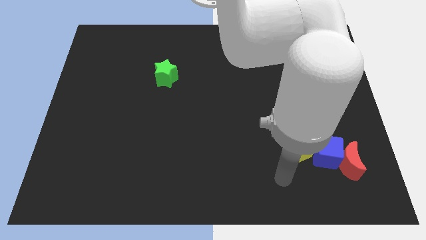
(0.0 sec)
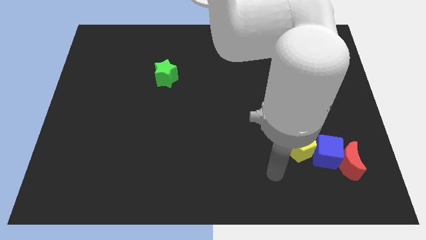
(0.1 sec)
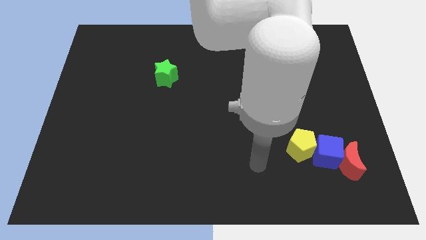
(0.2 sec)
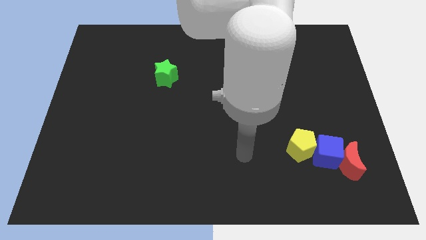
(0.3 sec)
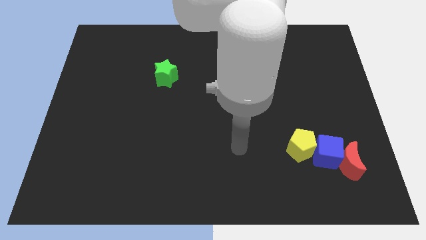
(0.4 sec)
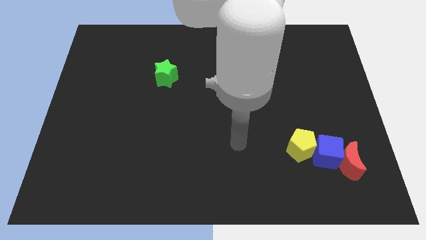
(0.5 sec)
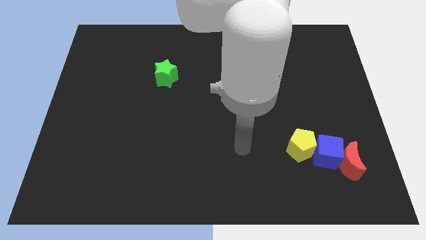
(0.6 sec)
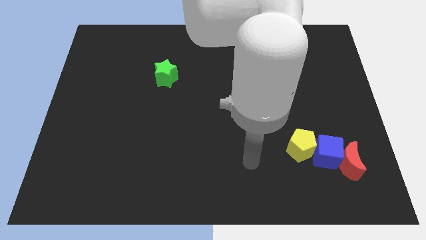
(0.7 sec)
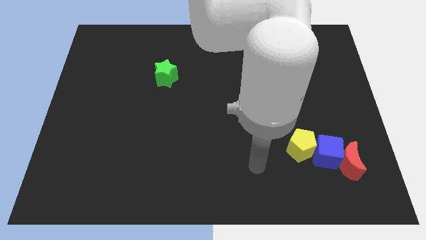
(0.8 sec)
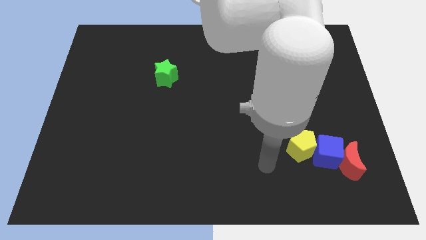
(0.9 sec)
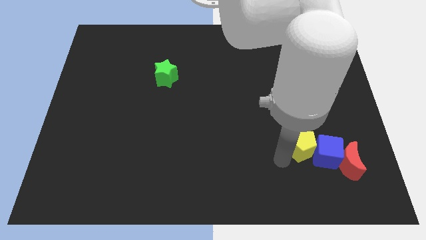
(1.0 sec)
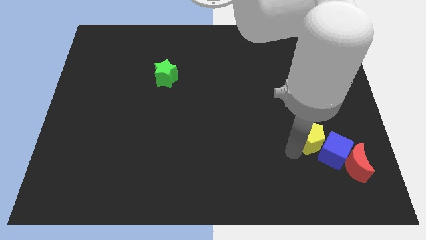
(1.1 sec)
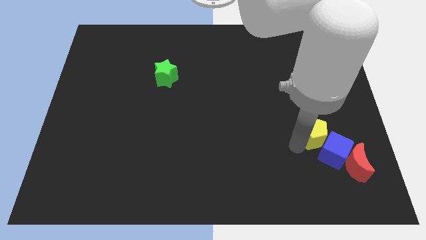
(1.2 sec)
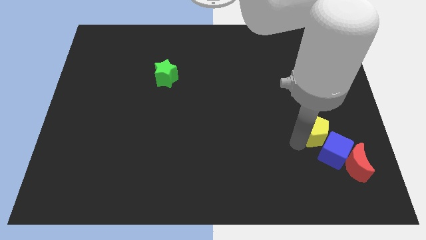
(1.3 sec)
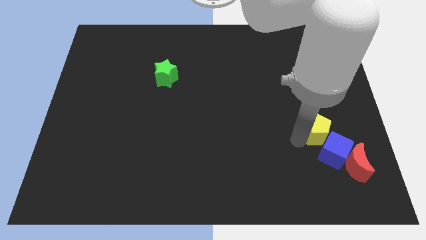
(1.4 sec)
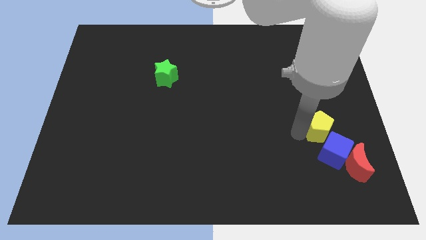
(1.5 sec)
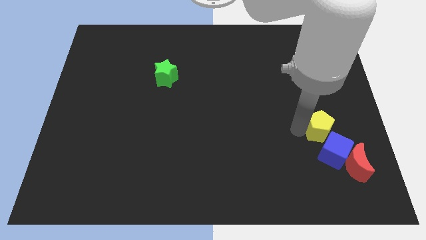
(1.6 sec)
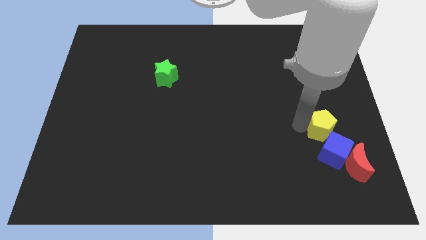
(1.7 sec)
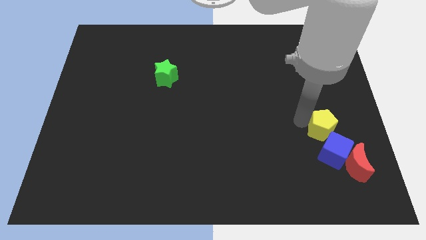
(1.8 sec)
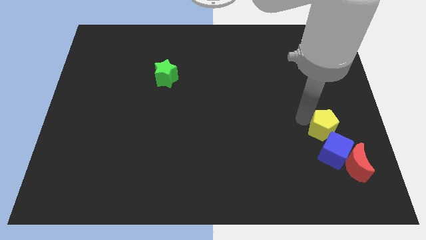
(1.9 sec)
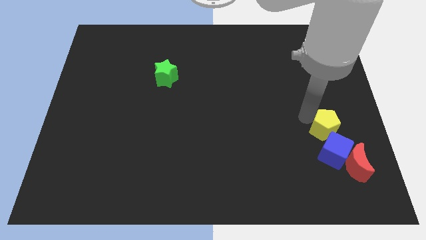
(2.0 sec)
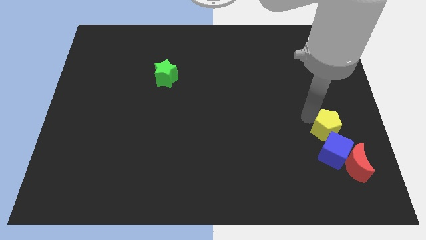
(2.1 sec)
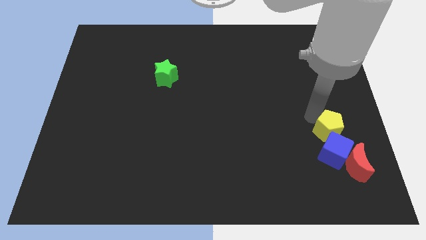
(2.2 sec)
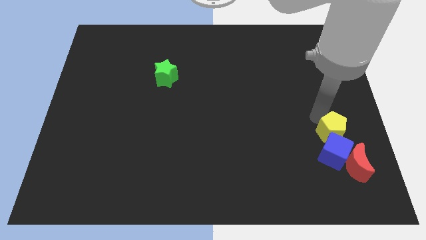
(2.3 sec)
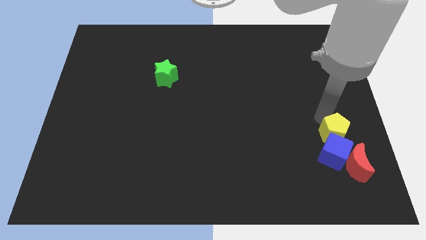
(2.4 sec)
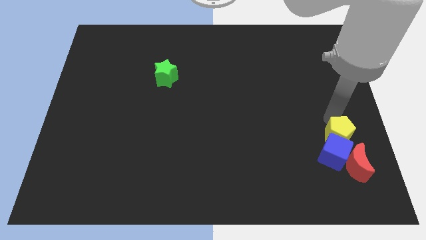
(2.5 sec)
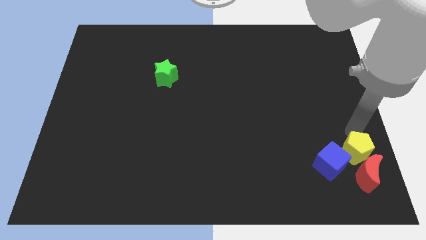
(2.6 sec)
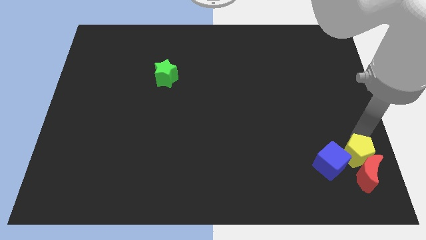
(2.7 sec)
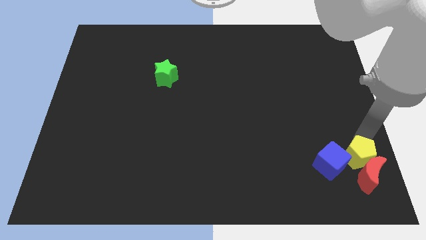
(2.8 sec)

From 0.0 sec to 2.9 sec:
push the yellow pentagon to the red moon

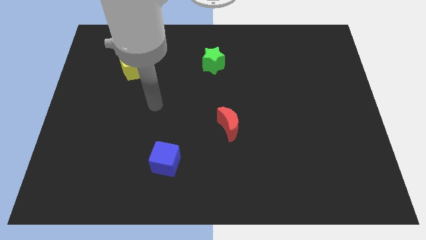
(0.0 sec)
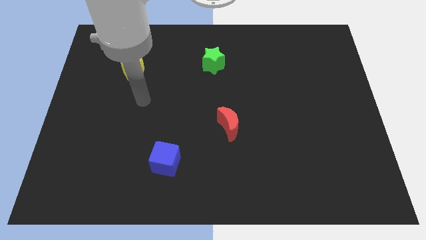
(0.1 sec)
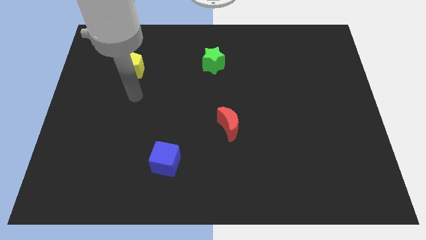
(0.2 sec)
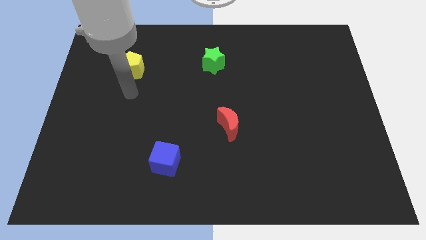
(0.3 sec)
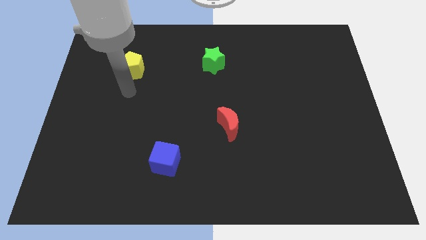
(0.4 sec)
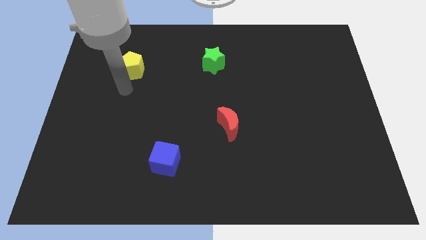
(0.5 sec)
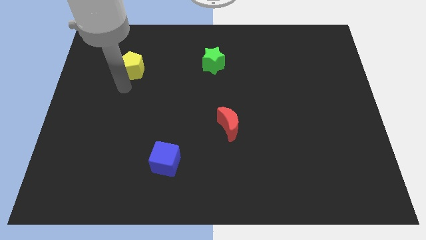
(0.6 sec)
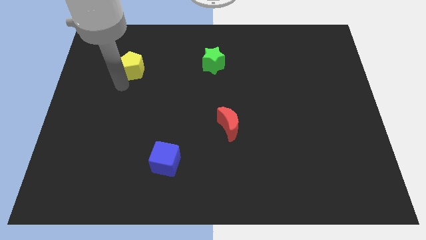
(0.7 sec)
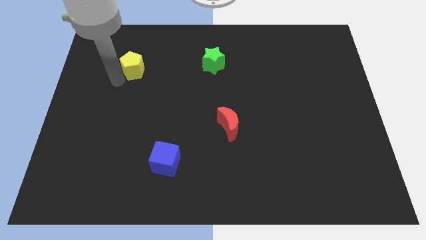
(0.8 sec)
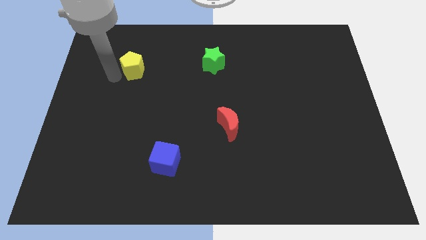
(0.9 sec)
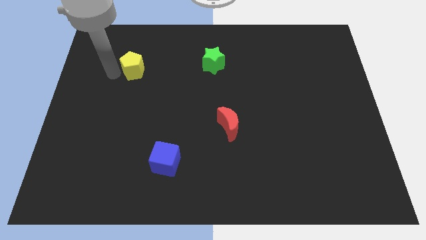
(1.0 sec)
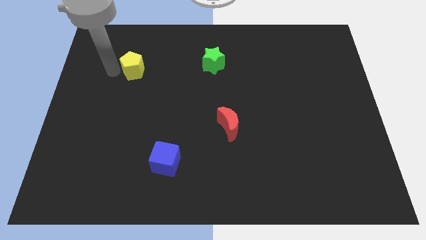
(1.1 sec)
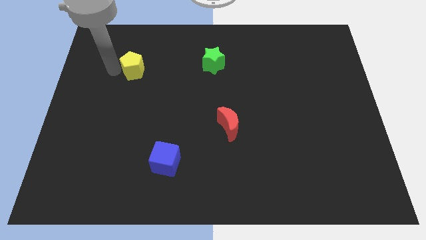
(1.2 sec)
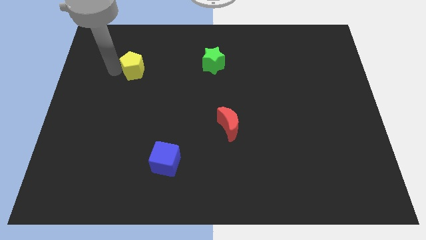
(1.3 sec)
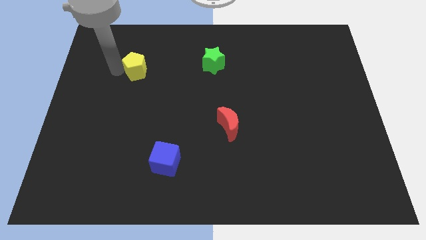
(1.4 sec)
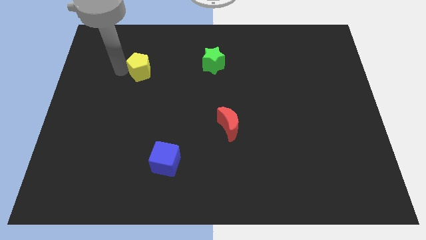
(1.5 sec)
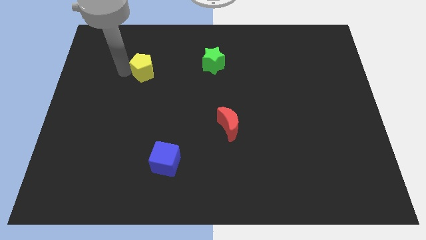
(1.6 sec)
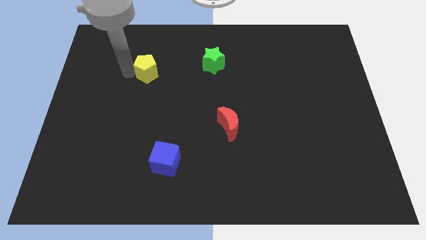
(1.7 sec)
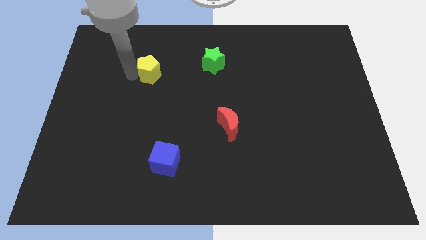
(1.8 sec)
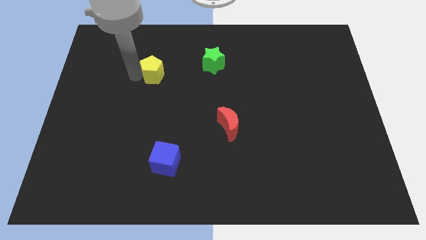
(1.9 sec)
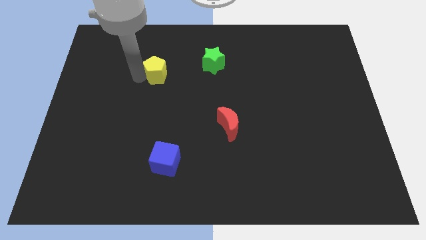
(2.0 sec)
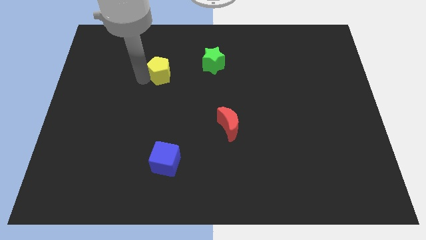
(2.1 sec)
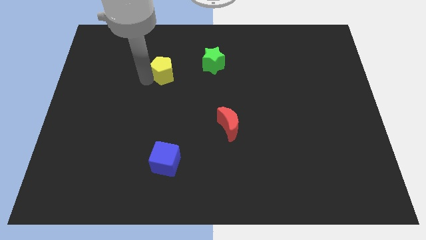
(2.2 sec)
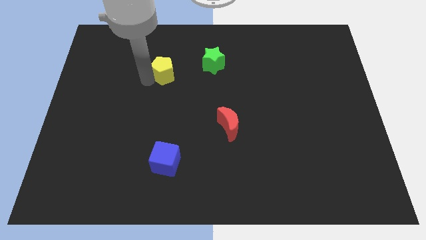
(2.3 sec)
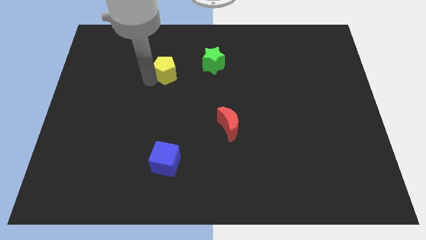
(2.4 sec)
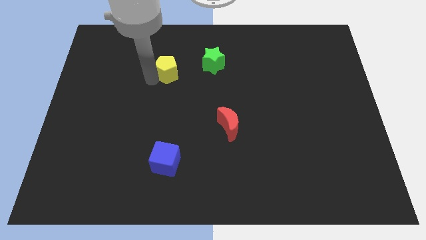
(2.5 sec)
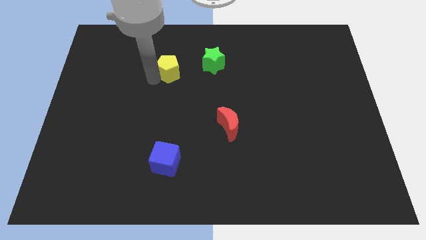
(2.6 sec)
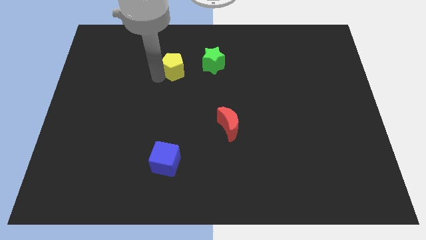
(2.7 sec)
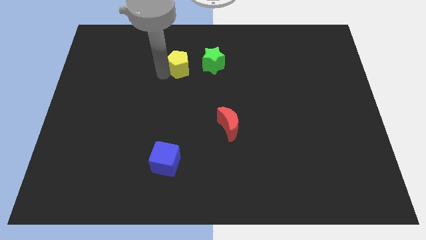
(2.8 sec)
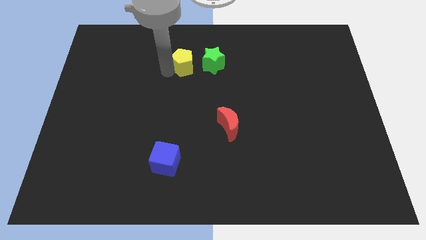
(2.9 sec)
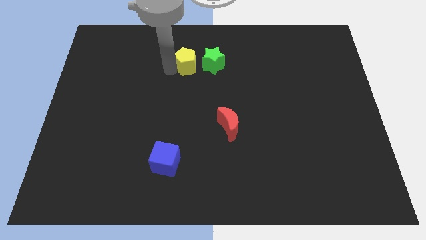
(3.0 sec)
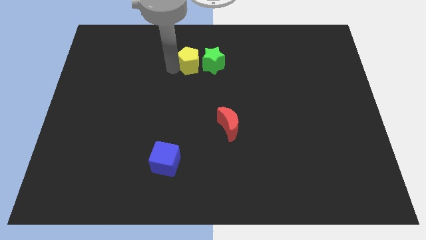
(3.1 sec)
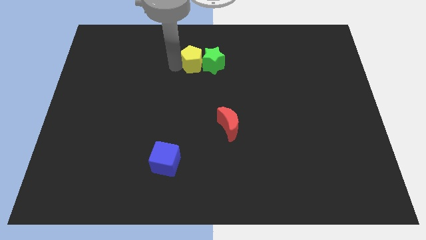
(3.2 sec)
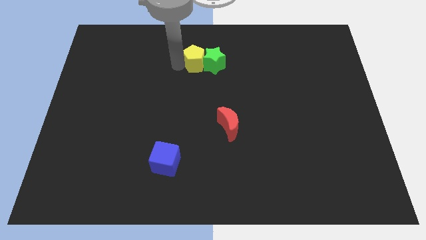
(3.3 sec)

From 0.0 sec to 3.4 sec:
move the pentagon close to the star

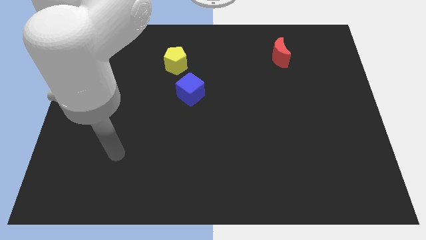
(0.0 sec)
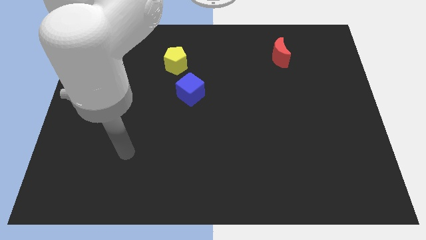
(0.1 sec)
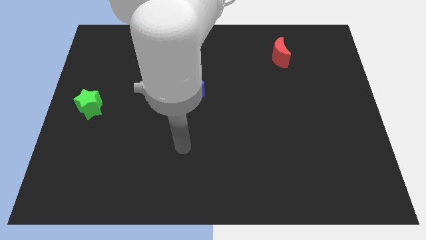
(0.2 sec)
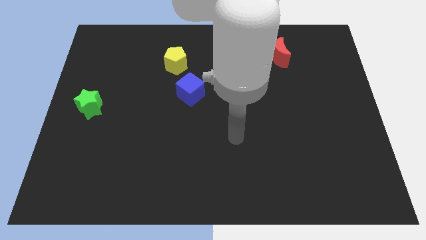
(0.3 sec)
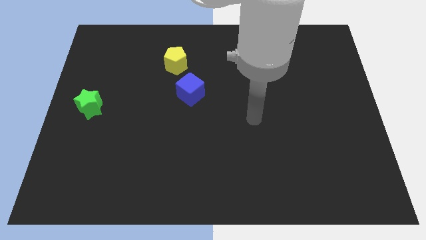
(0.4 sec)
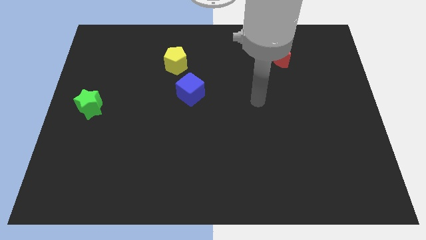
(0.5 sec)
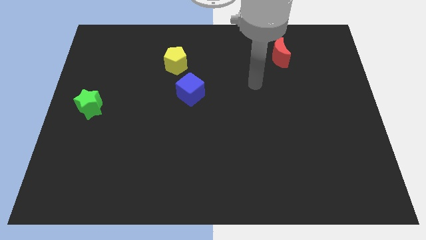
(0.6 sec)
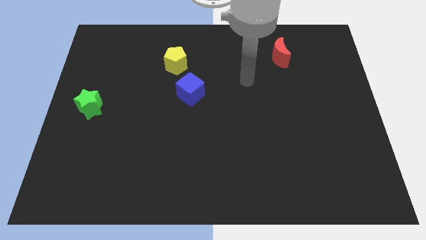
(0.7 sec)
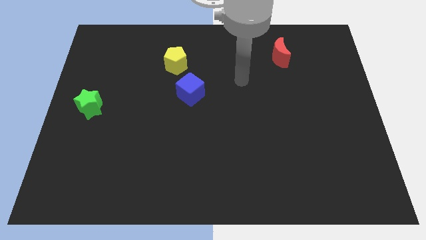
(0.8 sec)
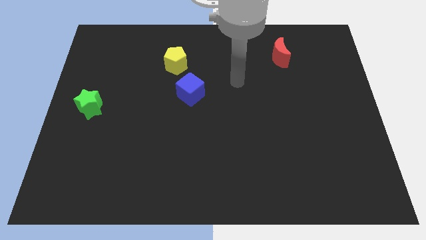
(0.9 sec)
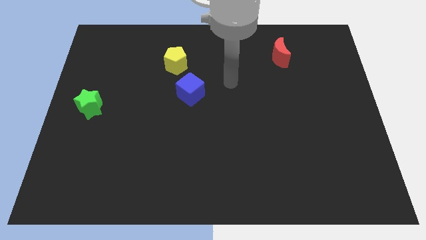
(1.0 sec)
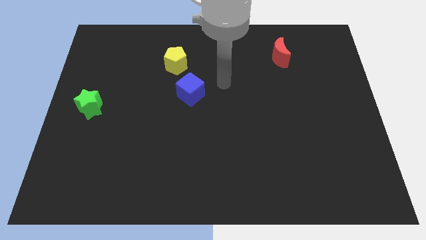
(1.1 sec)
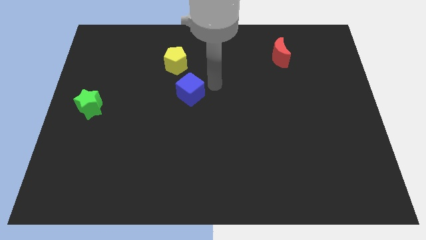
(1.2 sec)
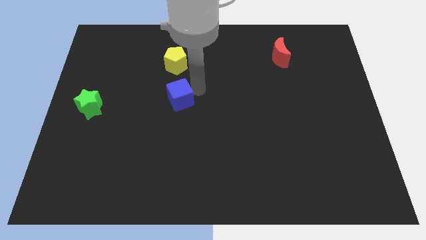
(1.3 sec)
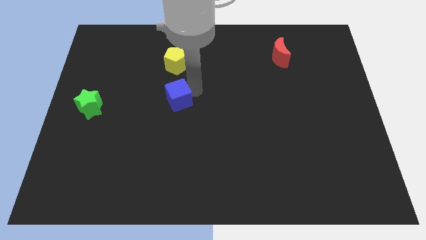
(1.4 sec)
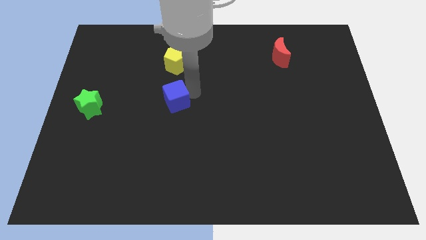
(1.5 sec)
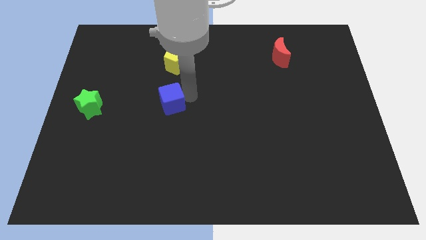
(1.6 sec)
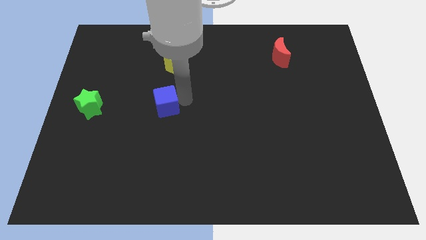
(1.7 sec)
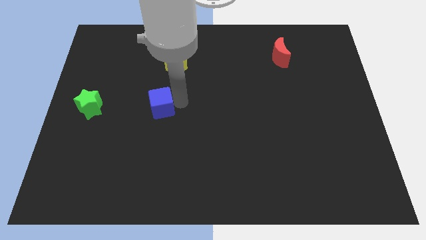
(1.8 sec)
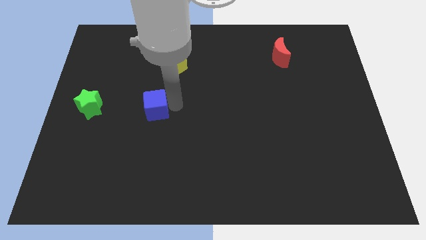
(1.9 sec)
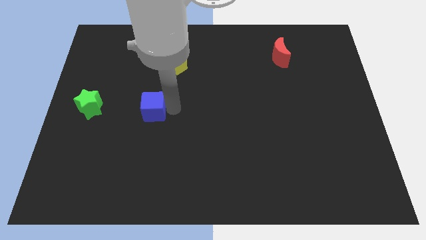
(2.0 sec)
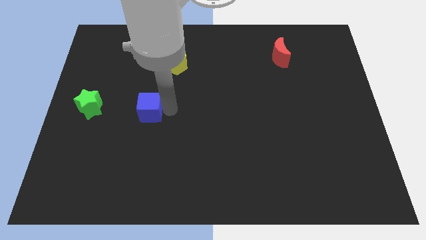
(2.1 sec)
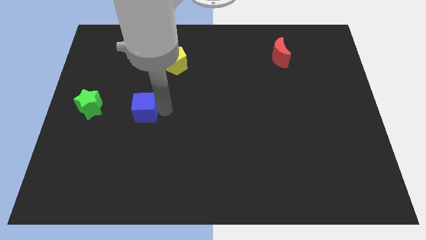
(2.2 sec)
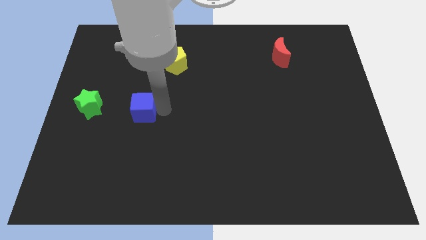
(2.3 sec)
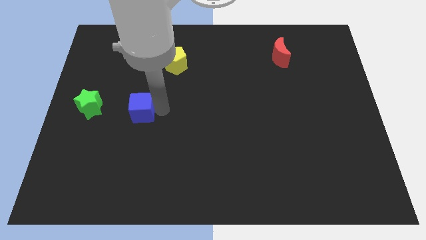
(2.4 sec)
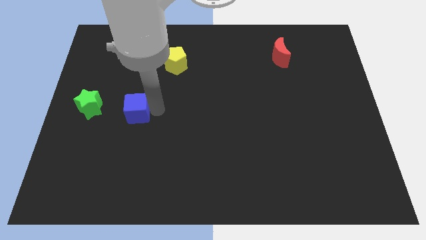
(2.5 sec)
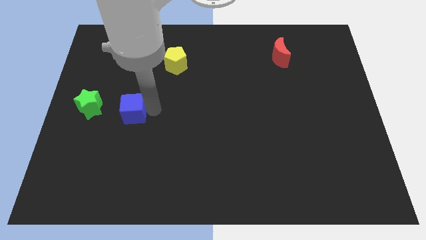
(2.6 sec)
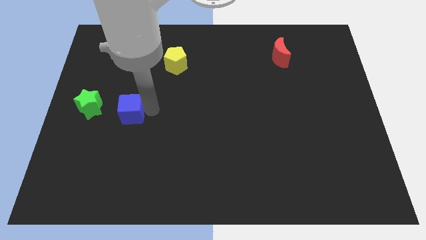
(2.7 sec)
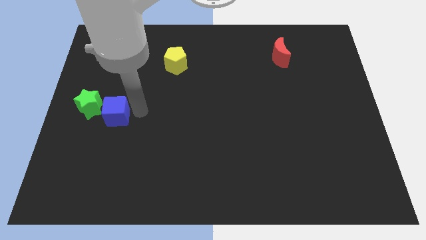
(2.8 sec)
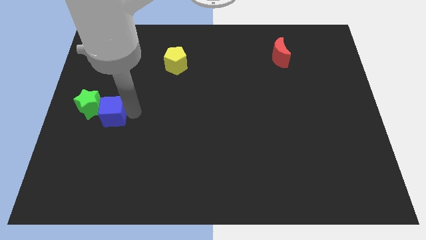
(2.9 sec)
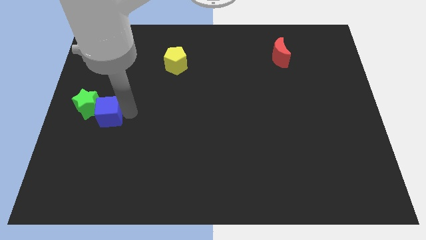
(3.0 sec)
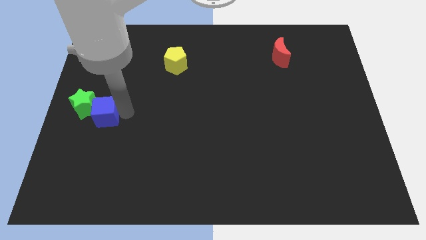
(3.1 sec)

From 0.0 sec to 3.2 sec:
put the blue cube close to the green block
